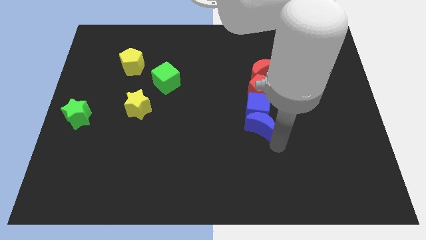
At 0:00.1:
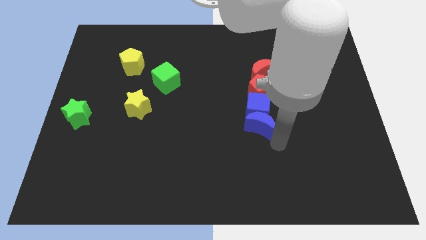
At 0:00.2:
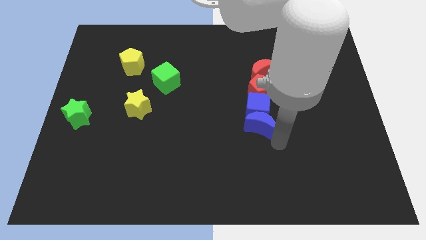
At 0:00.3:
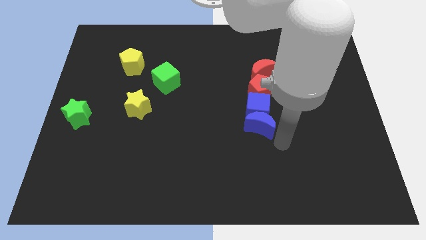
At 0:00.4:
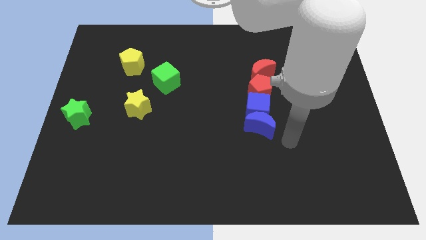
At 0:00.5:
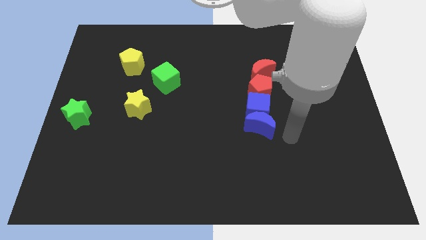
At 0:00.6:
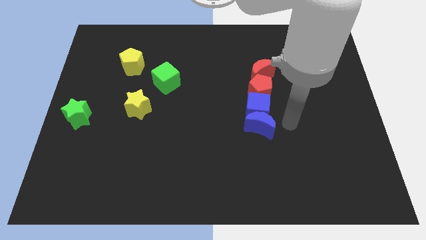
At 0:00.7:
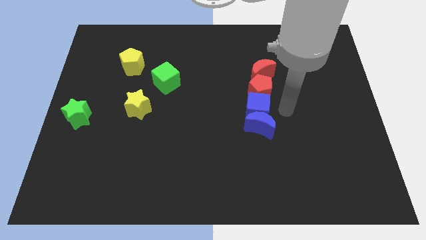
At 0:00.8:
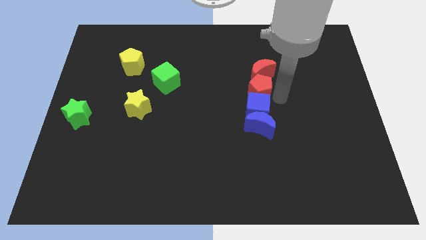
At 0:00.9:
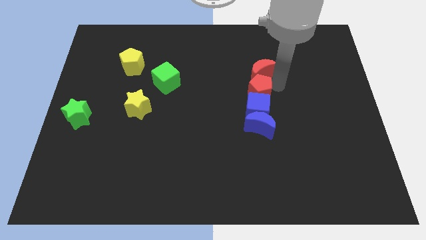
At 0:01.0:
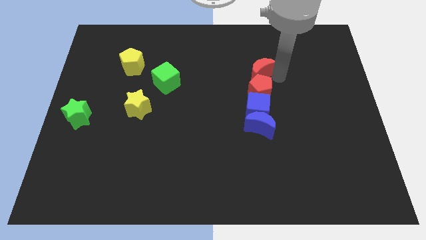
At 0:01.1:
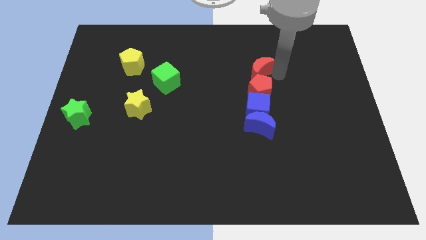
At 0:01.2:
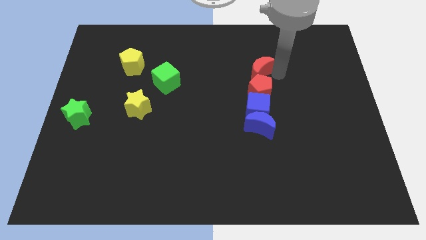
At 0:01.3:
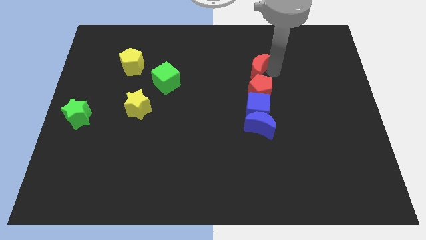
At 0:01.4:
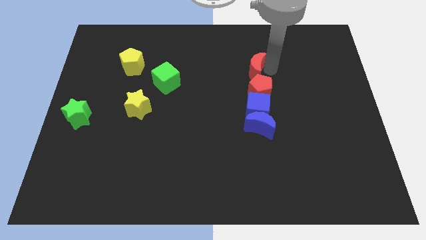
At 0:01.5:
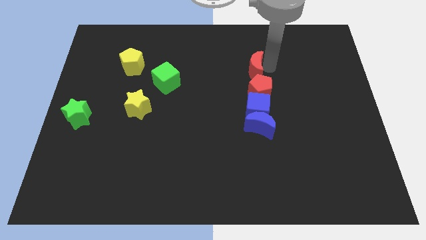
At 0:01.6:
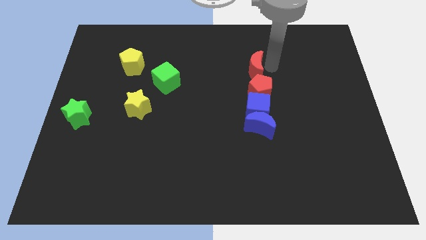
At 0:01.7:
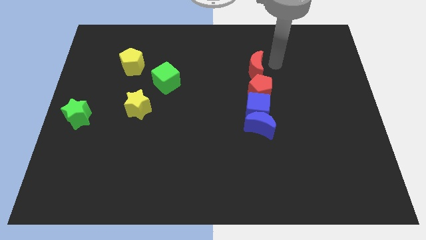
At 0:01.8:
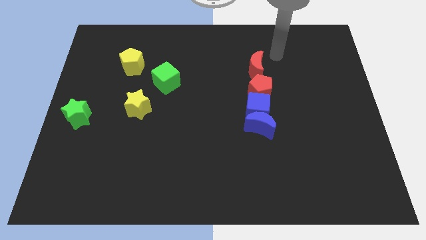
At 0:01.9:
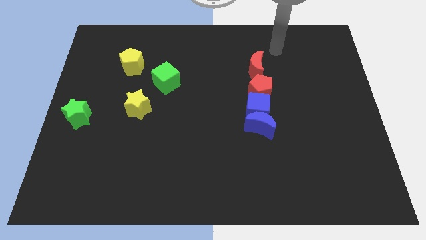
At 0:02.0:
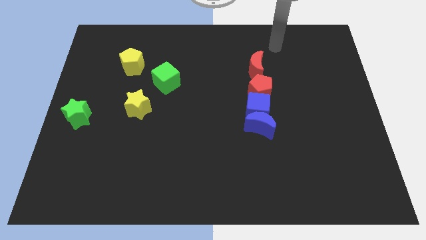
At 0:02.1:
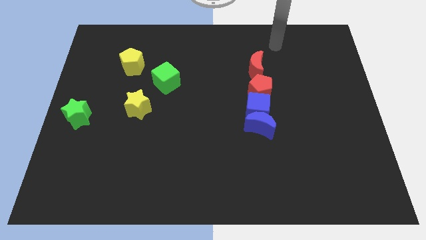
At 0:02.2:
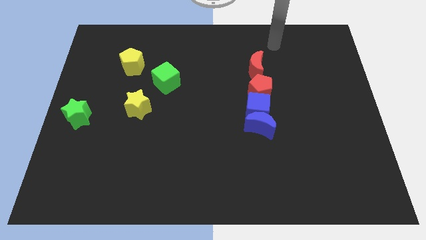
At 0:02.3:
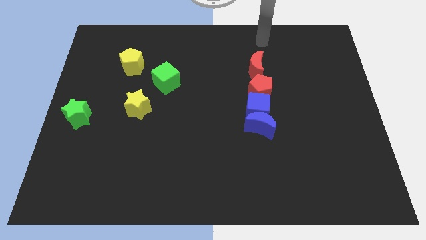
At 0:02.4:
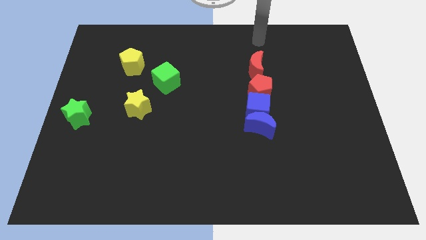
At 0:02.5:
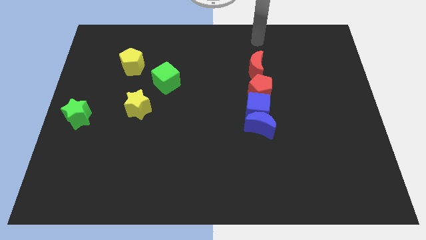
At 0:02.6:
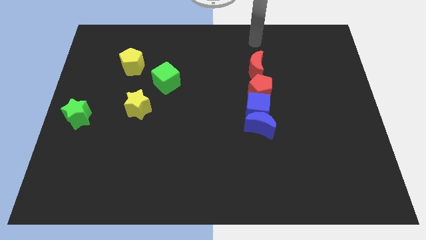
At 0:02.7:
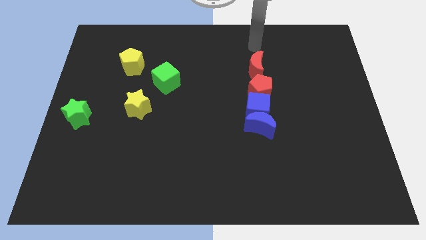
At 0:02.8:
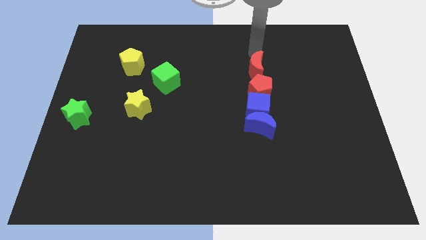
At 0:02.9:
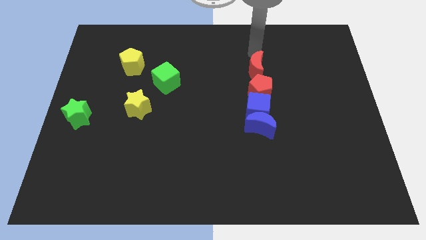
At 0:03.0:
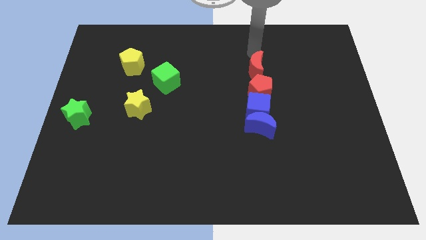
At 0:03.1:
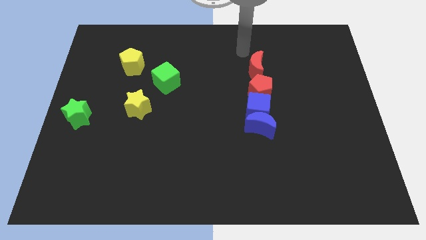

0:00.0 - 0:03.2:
slightly push the blue crescent and red crescent

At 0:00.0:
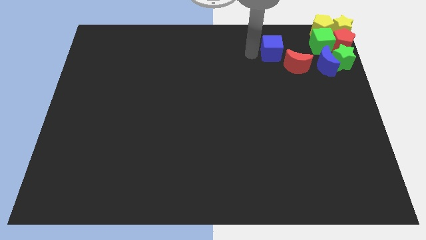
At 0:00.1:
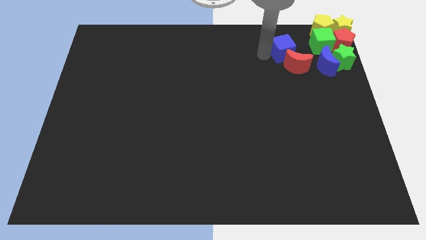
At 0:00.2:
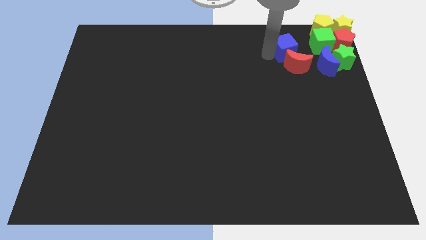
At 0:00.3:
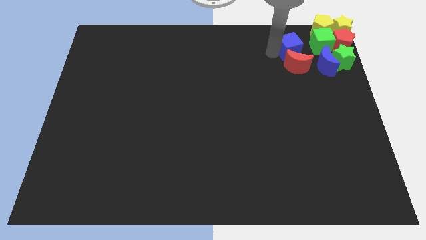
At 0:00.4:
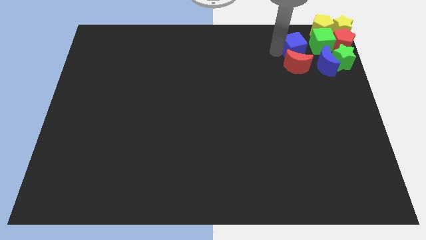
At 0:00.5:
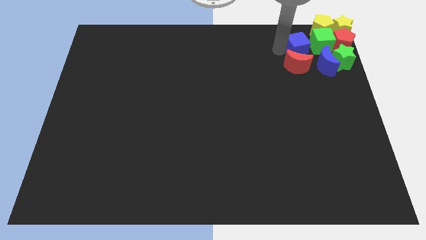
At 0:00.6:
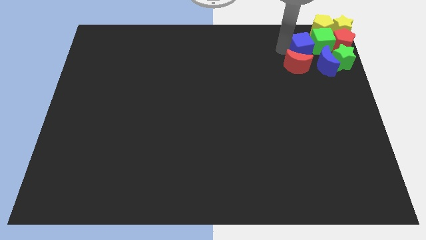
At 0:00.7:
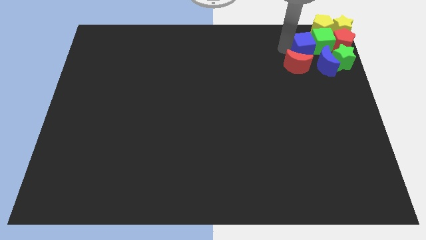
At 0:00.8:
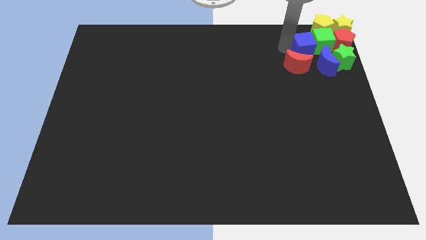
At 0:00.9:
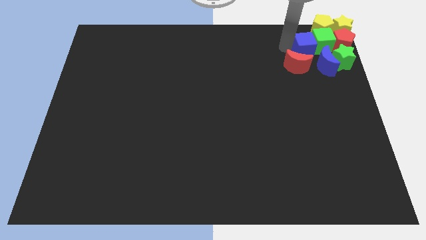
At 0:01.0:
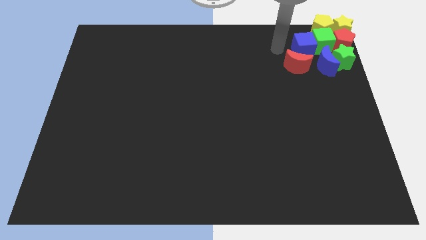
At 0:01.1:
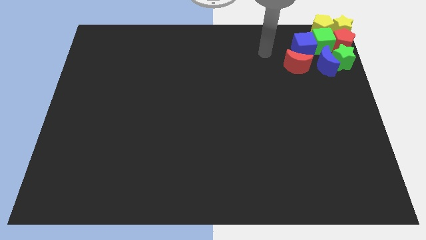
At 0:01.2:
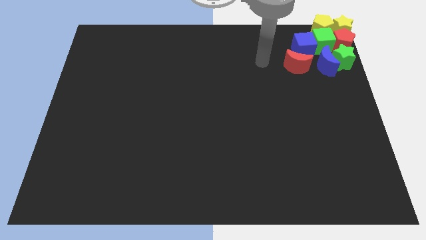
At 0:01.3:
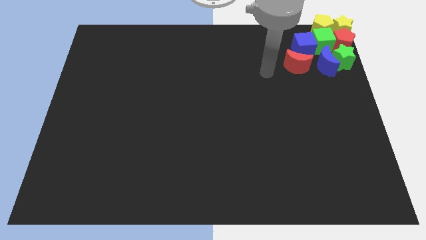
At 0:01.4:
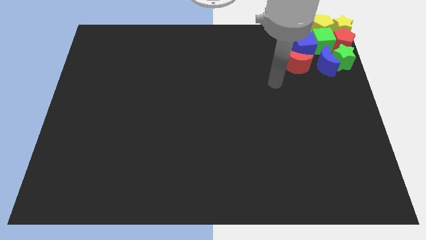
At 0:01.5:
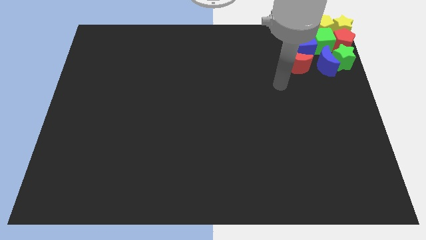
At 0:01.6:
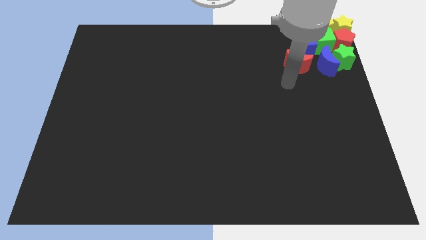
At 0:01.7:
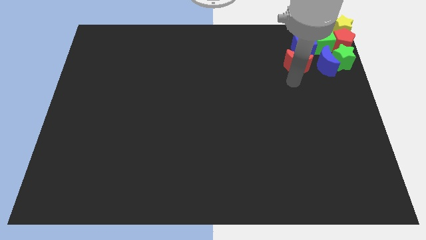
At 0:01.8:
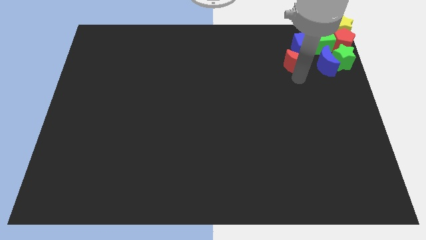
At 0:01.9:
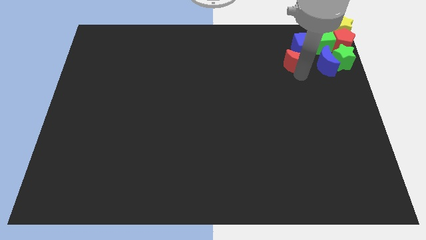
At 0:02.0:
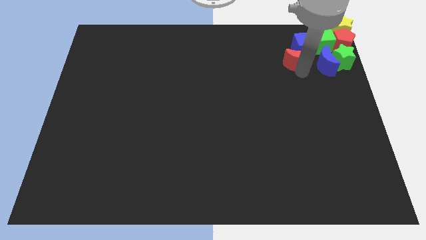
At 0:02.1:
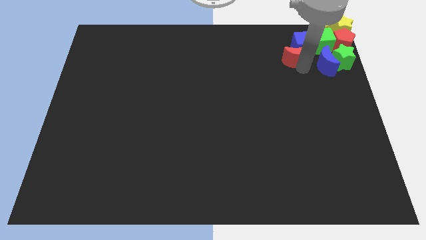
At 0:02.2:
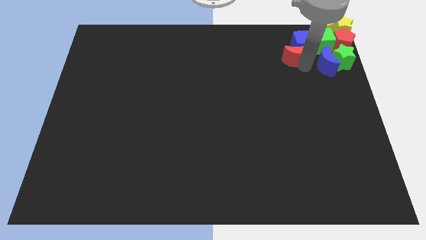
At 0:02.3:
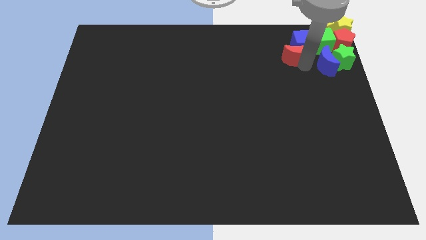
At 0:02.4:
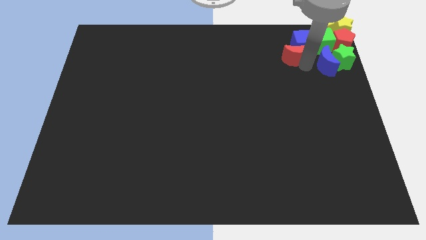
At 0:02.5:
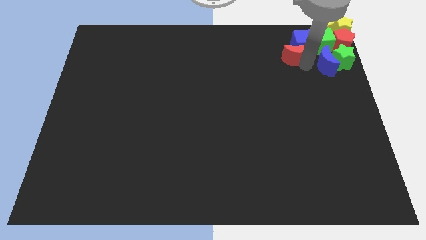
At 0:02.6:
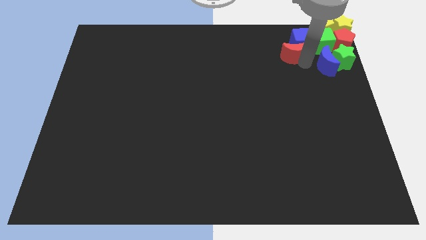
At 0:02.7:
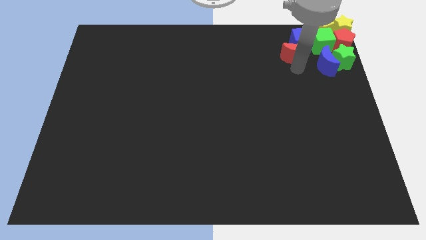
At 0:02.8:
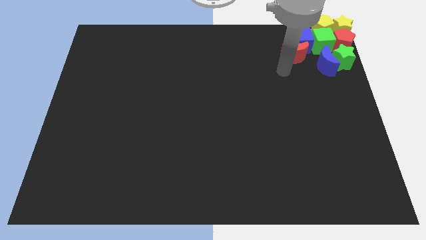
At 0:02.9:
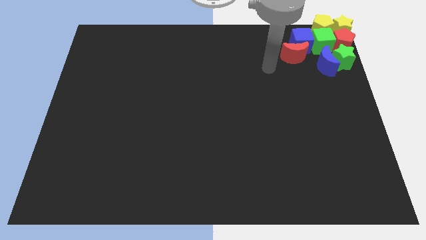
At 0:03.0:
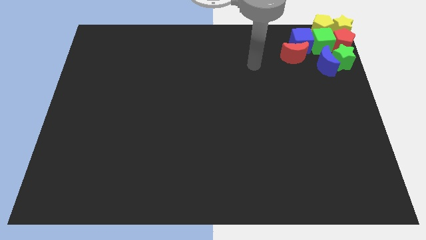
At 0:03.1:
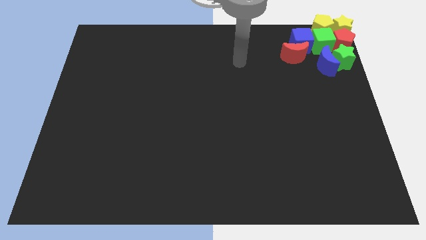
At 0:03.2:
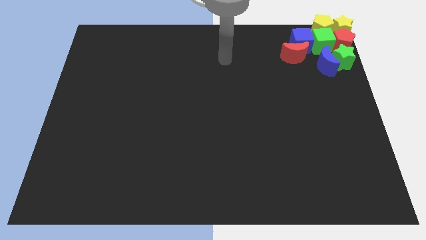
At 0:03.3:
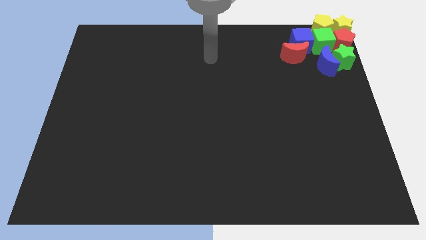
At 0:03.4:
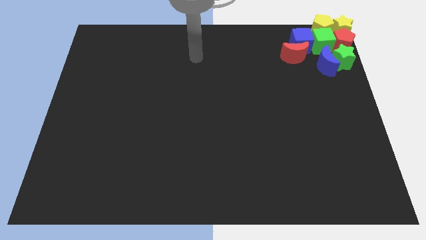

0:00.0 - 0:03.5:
move blue cube into the green cube

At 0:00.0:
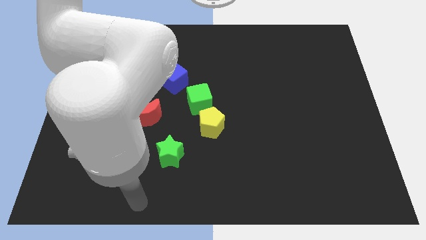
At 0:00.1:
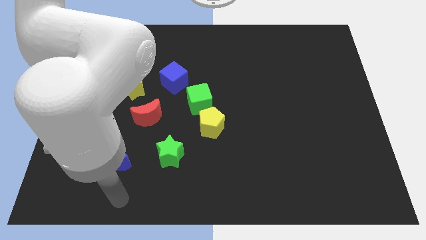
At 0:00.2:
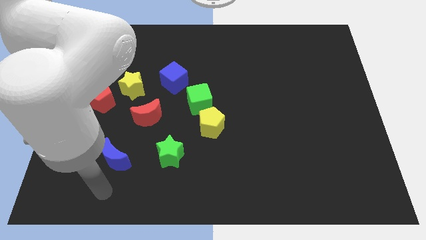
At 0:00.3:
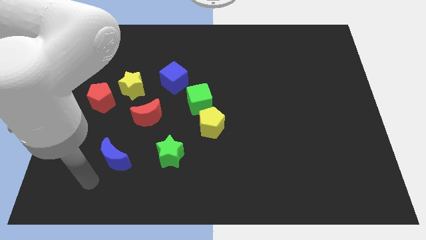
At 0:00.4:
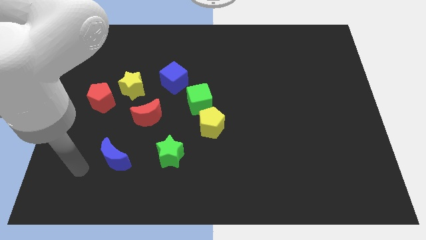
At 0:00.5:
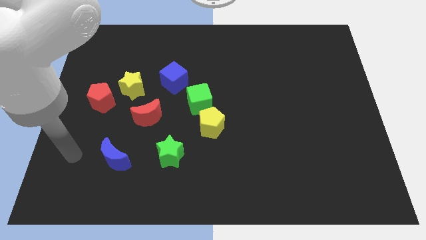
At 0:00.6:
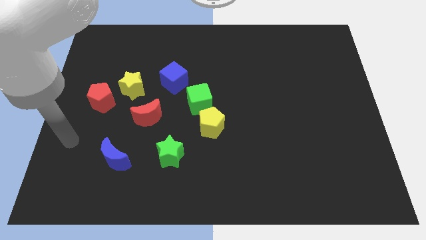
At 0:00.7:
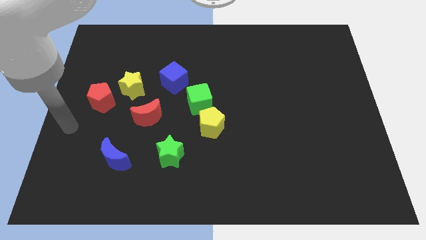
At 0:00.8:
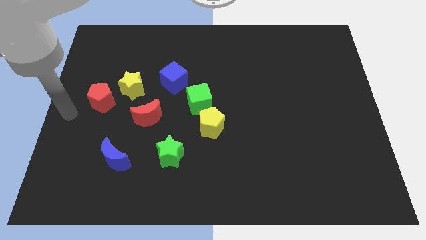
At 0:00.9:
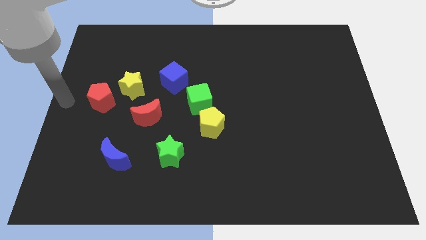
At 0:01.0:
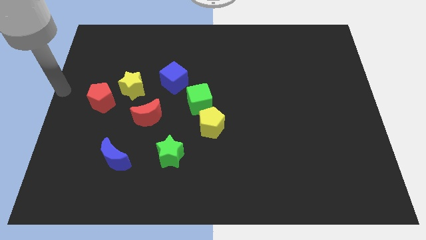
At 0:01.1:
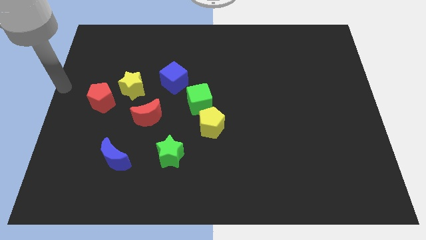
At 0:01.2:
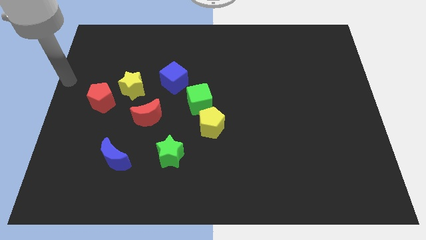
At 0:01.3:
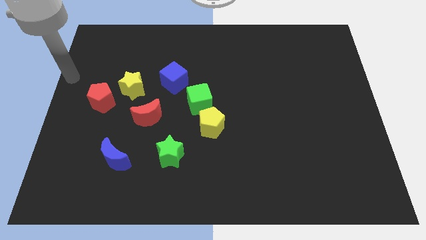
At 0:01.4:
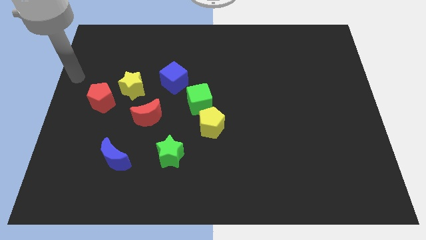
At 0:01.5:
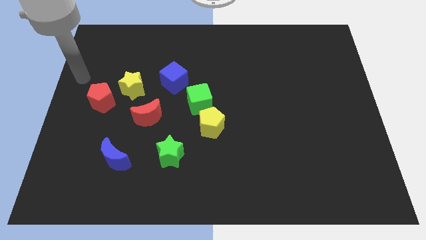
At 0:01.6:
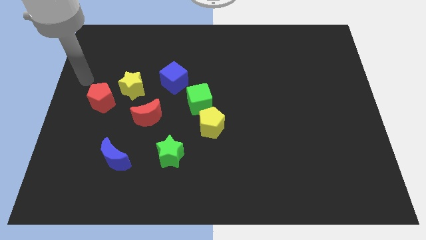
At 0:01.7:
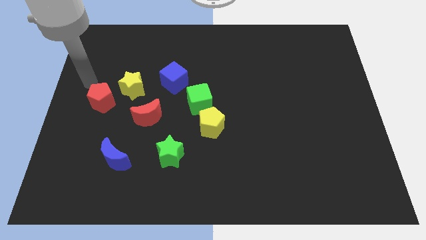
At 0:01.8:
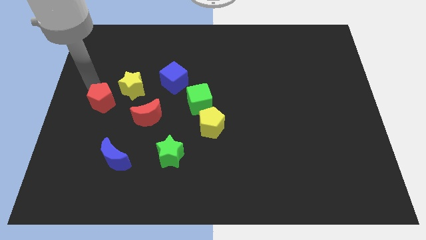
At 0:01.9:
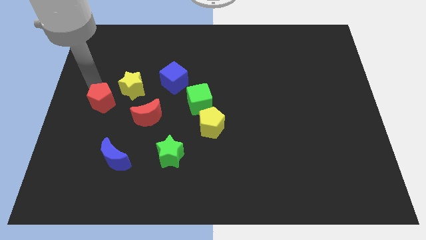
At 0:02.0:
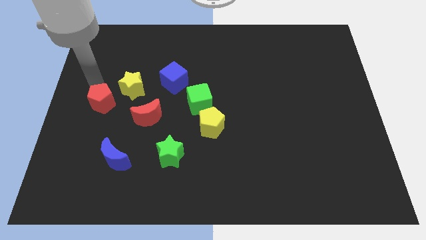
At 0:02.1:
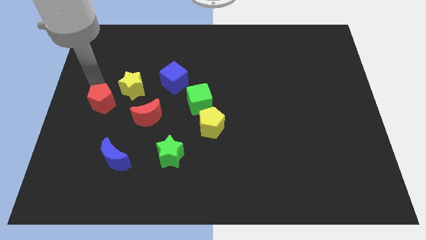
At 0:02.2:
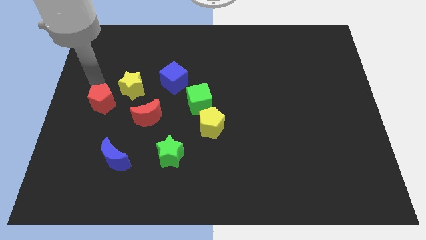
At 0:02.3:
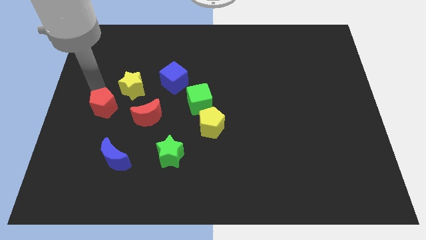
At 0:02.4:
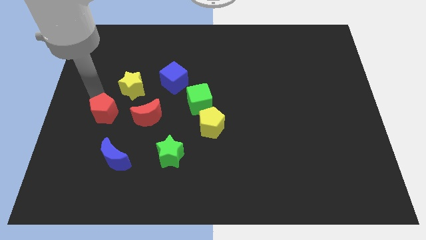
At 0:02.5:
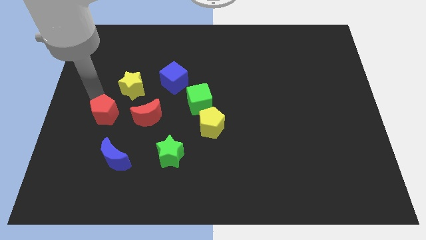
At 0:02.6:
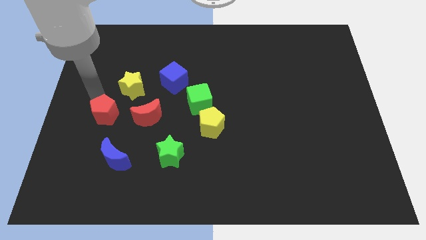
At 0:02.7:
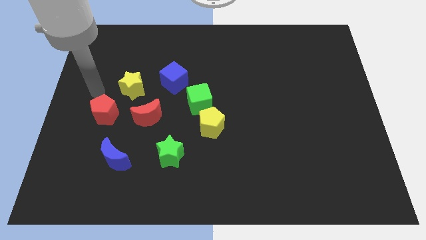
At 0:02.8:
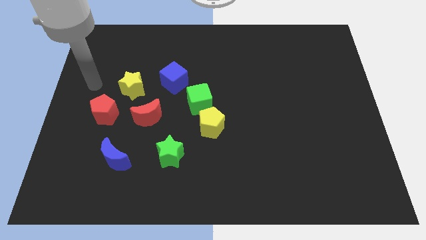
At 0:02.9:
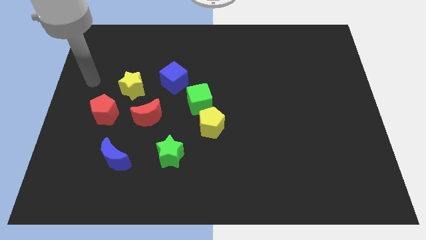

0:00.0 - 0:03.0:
move red pentagon slightly down to make a circle
